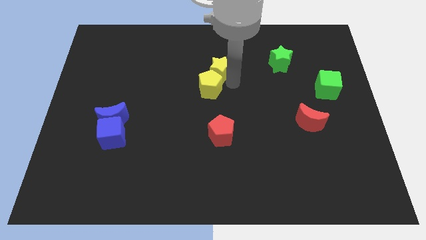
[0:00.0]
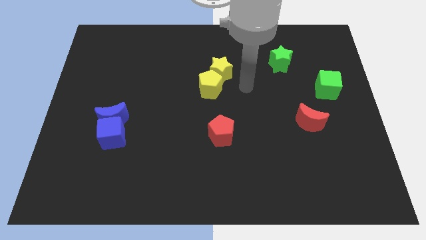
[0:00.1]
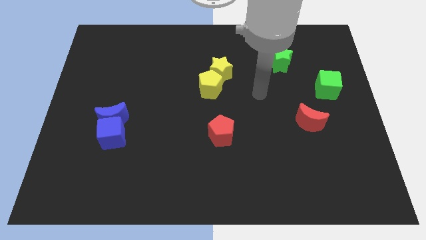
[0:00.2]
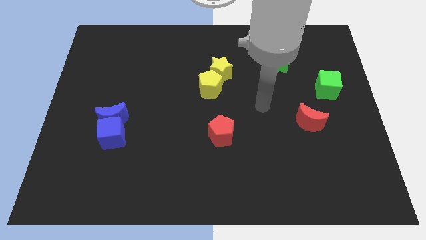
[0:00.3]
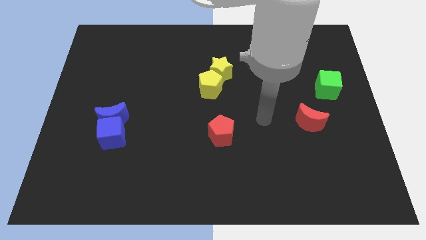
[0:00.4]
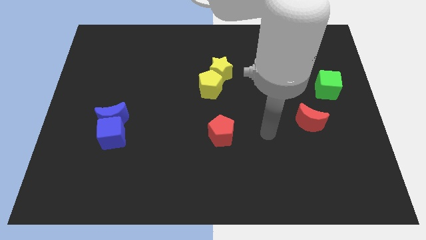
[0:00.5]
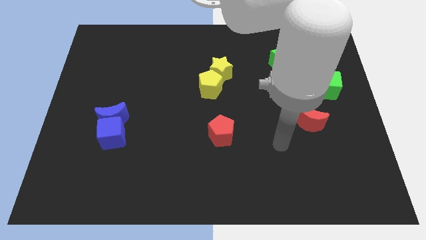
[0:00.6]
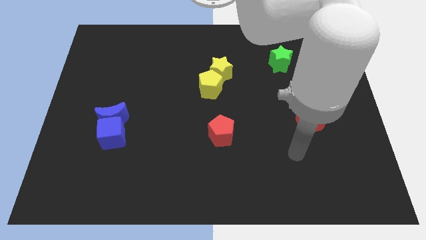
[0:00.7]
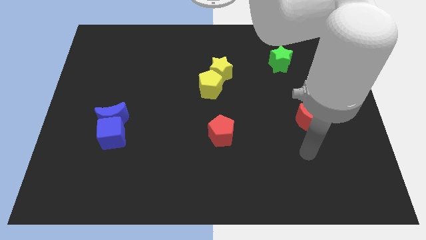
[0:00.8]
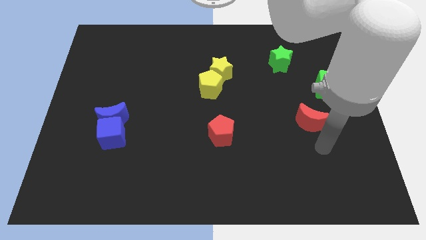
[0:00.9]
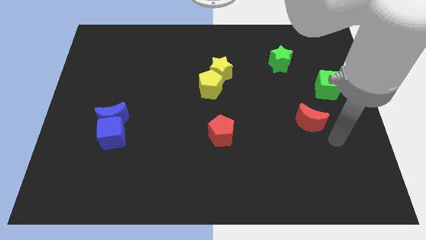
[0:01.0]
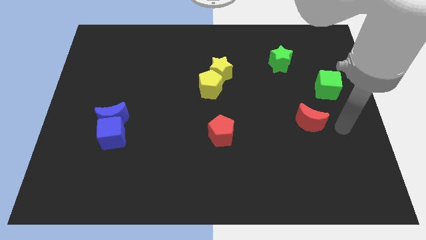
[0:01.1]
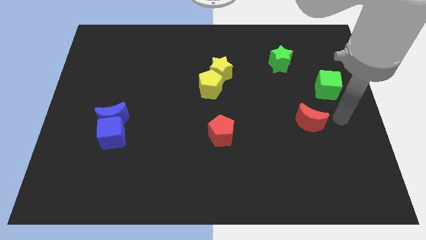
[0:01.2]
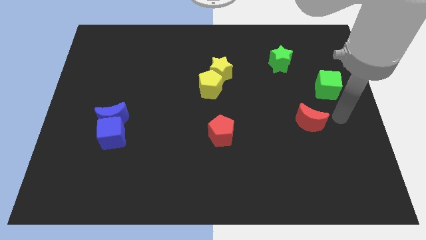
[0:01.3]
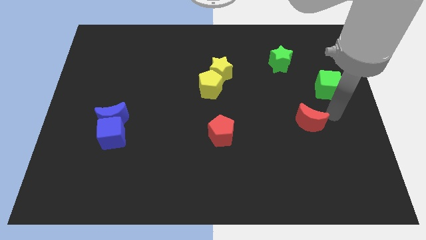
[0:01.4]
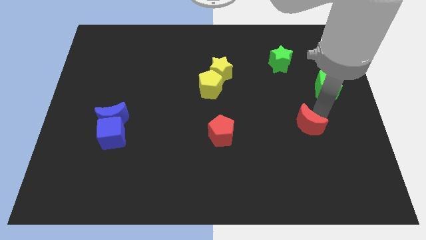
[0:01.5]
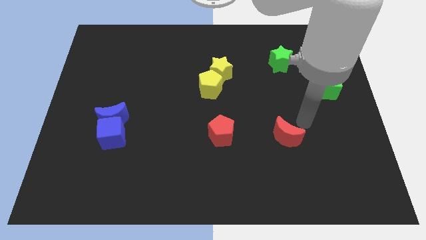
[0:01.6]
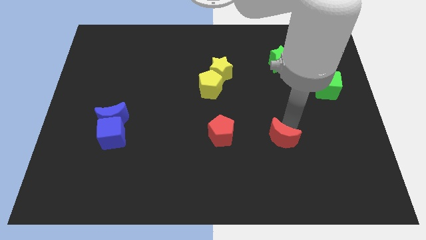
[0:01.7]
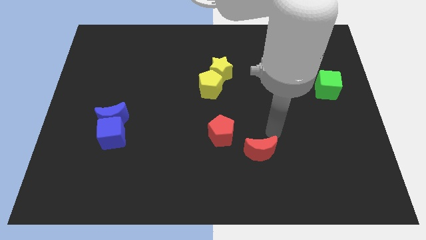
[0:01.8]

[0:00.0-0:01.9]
pull red crescent diagonally below red pentagon

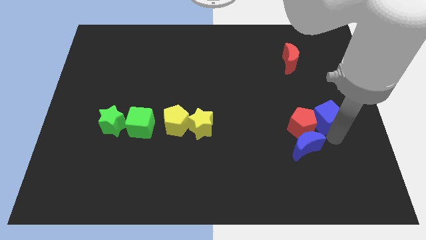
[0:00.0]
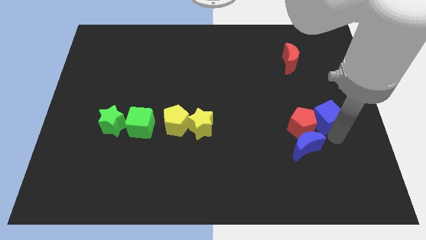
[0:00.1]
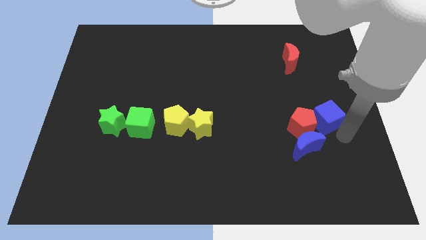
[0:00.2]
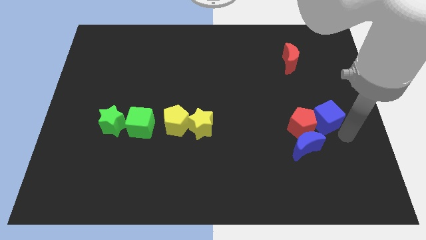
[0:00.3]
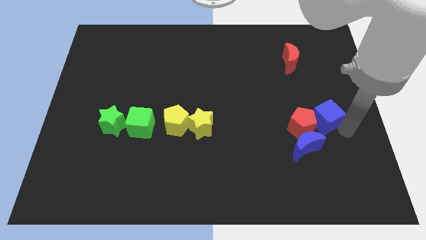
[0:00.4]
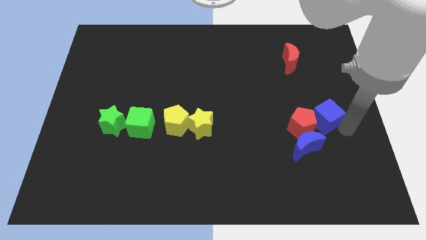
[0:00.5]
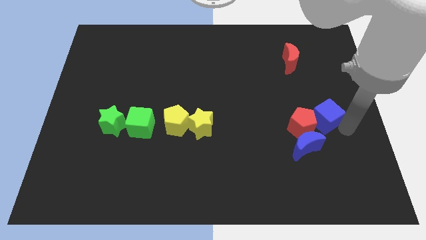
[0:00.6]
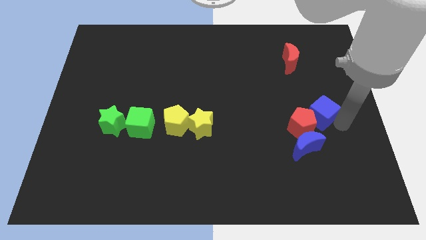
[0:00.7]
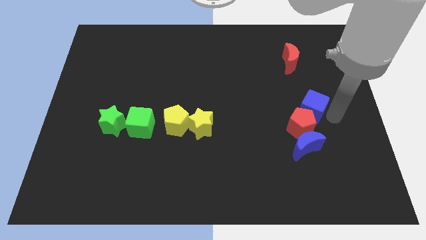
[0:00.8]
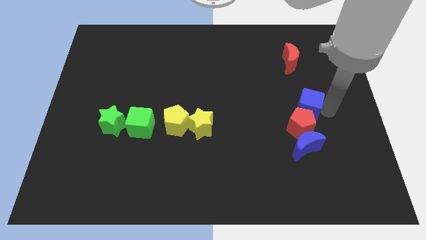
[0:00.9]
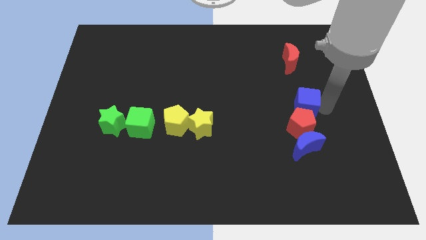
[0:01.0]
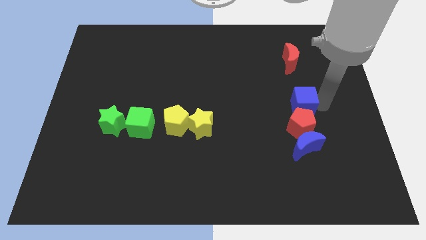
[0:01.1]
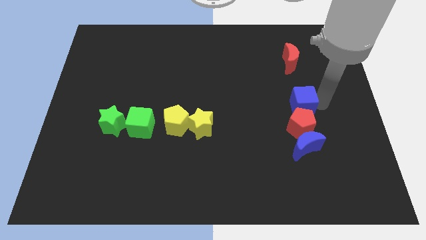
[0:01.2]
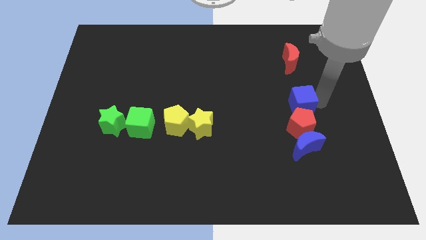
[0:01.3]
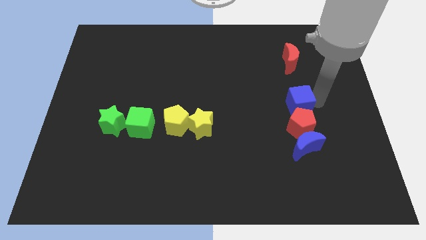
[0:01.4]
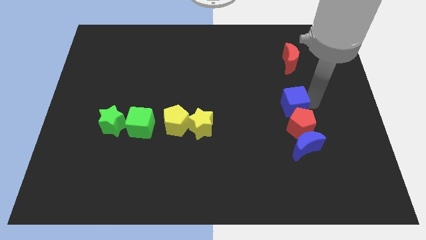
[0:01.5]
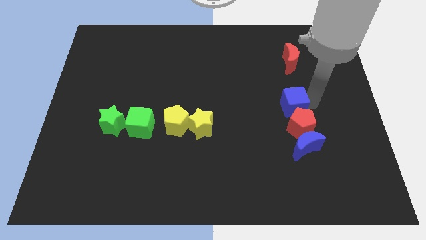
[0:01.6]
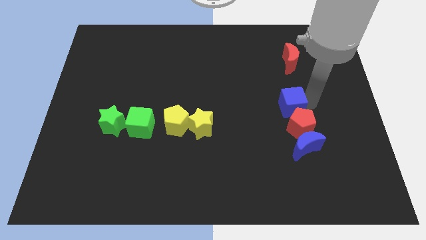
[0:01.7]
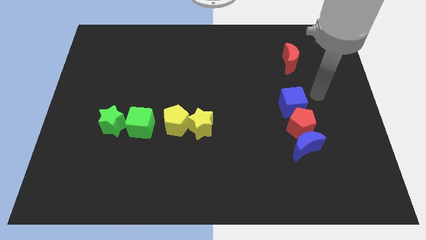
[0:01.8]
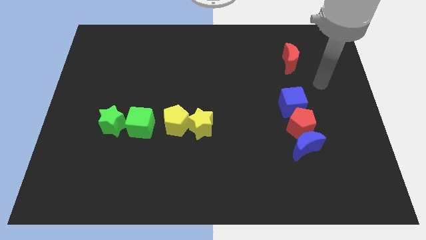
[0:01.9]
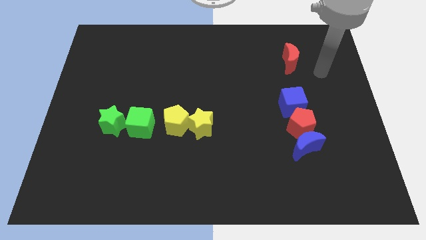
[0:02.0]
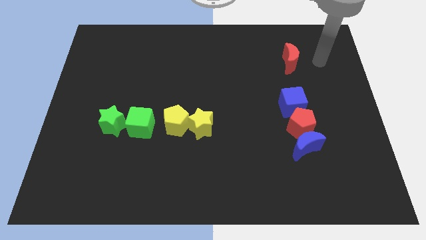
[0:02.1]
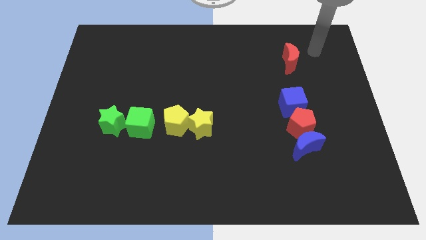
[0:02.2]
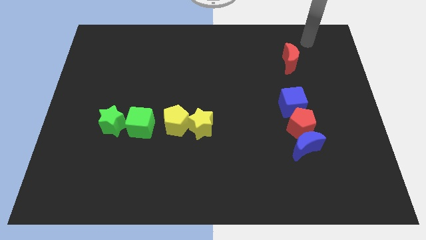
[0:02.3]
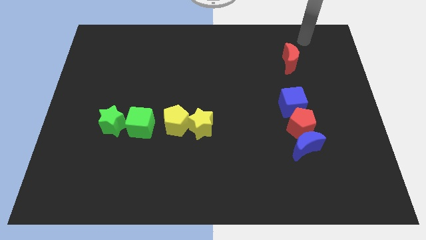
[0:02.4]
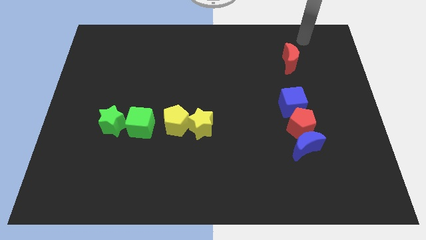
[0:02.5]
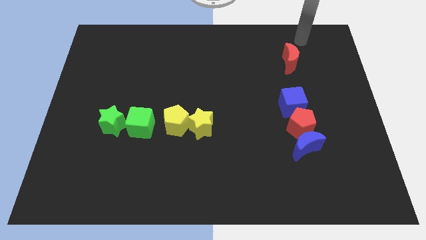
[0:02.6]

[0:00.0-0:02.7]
place the blue cube on top of red pentagon

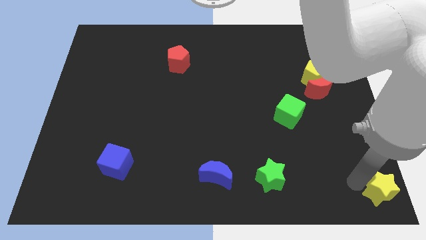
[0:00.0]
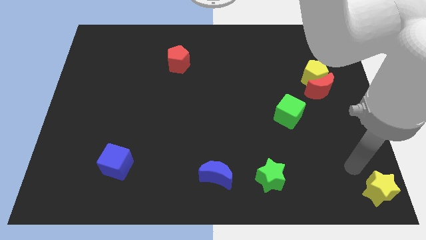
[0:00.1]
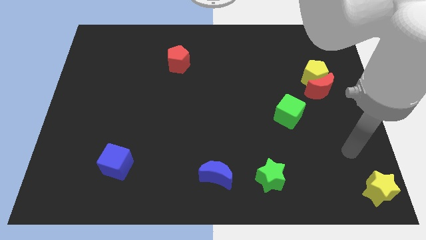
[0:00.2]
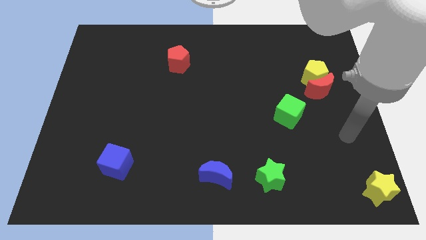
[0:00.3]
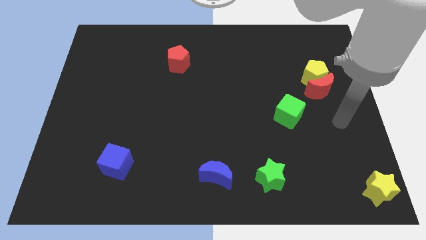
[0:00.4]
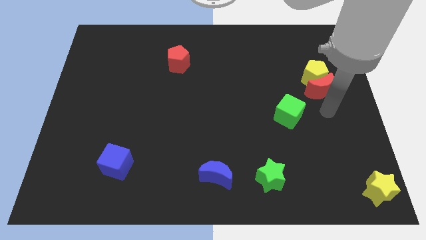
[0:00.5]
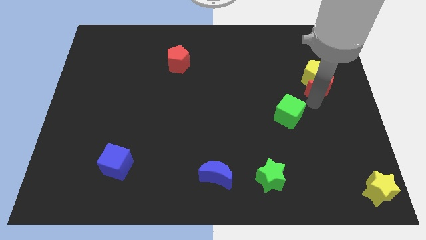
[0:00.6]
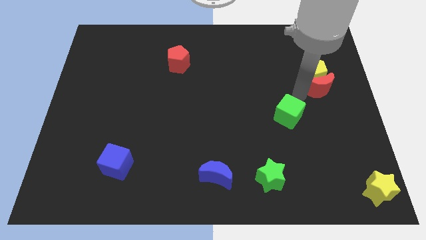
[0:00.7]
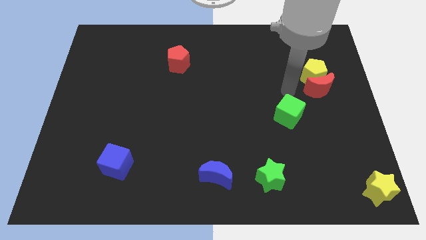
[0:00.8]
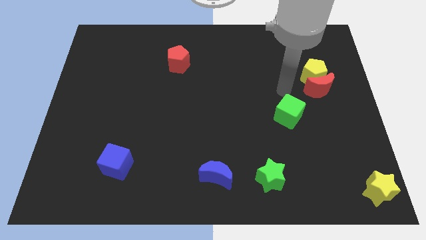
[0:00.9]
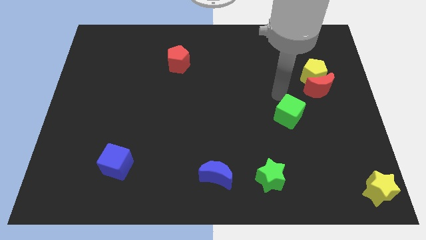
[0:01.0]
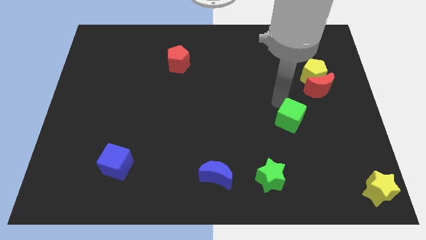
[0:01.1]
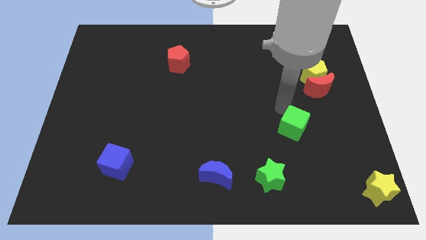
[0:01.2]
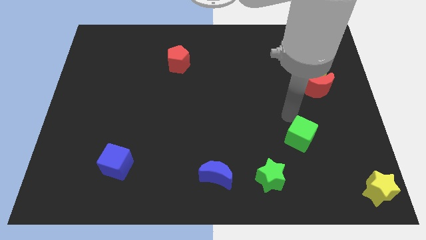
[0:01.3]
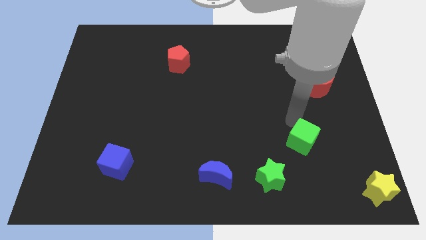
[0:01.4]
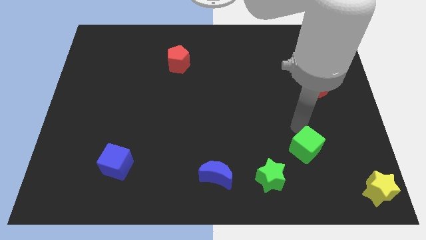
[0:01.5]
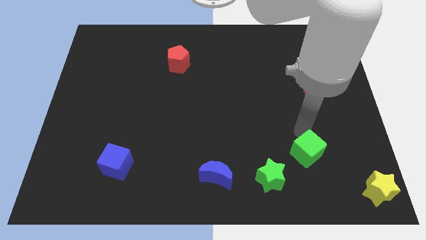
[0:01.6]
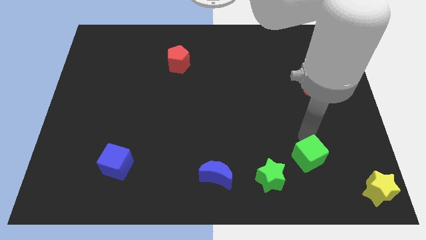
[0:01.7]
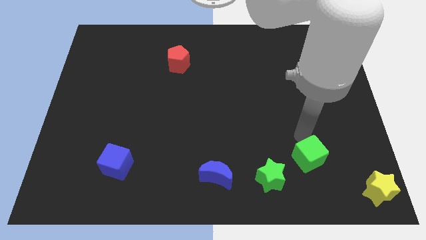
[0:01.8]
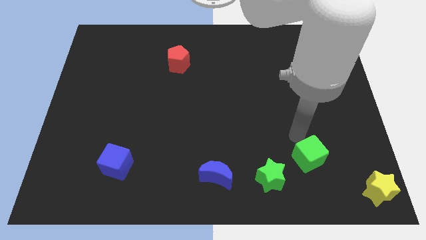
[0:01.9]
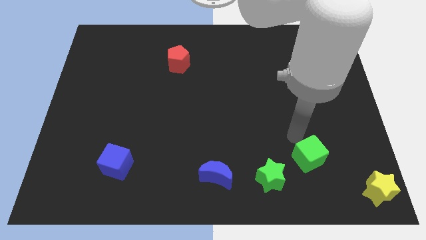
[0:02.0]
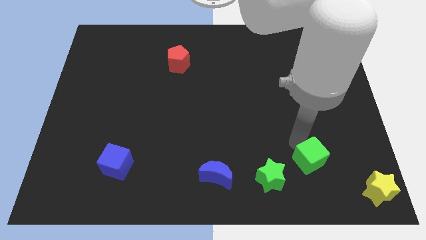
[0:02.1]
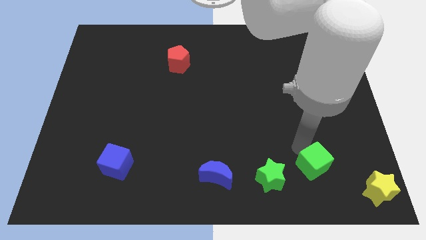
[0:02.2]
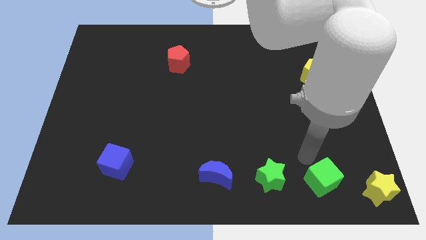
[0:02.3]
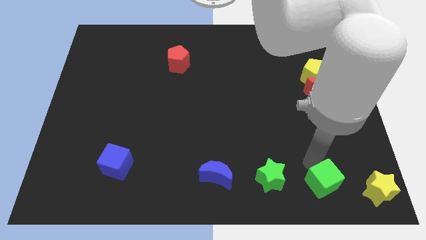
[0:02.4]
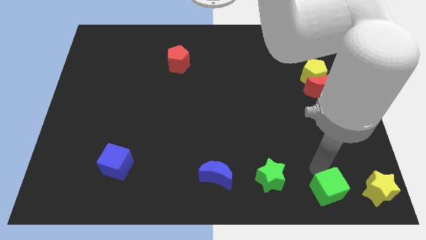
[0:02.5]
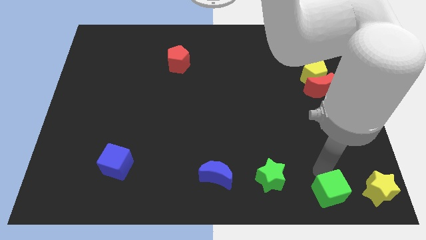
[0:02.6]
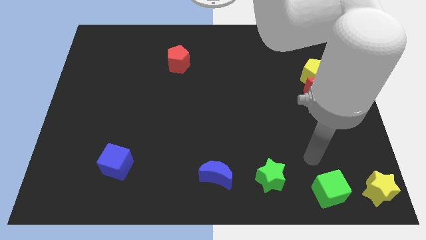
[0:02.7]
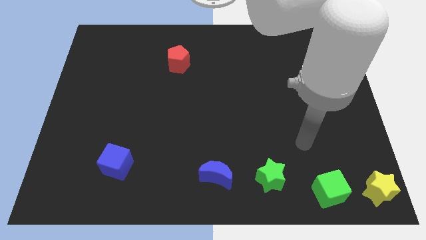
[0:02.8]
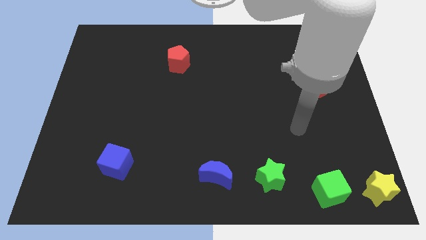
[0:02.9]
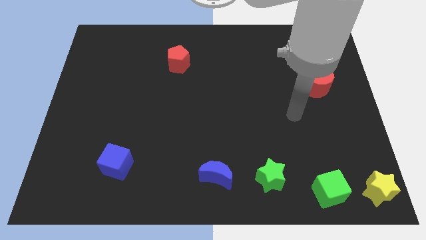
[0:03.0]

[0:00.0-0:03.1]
push the green cube in between the green star and yellow star

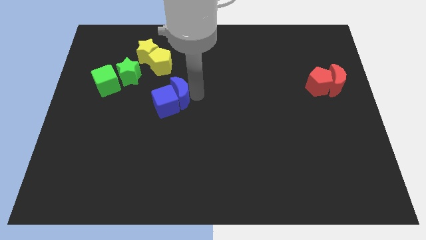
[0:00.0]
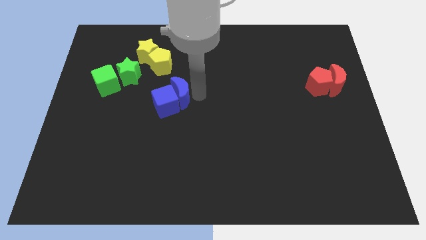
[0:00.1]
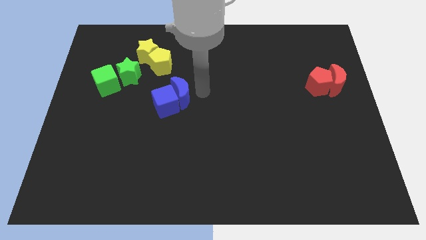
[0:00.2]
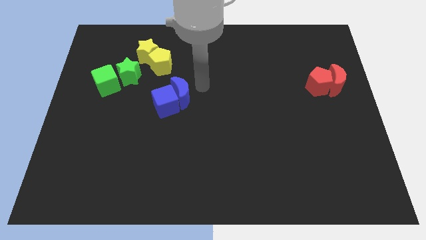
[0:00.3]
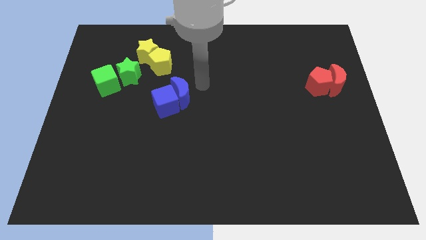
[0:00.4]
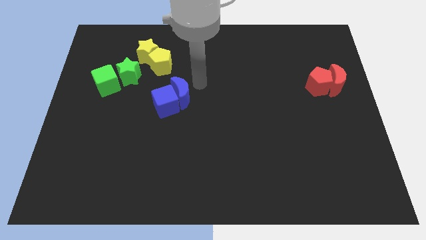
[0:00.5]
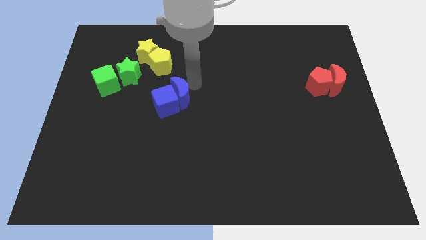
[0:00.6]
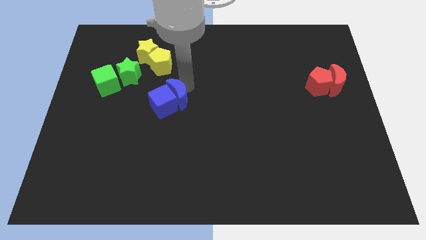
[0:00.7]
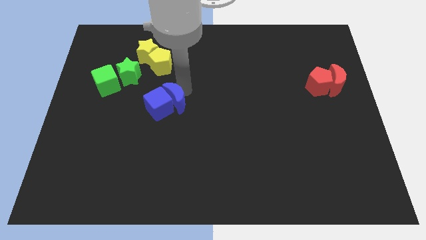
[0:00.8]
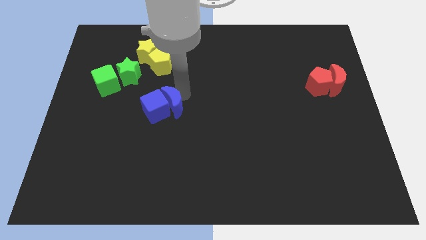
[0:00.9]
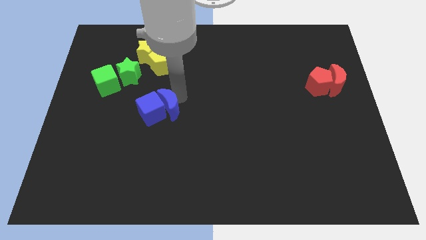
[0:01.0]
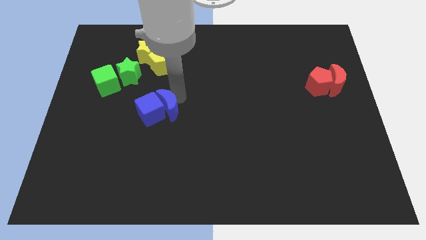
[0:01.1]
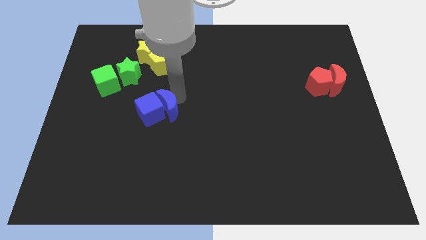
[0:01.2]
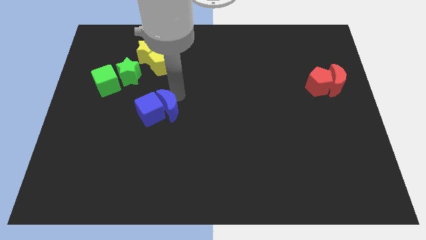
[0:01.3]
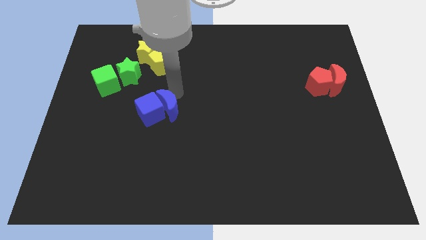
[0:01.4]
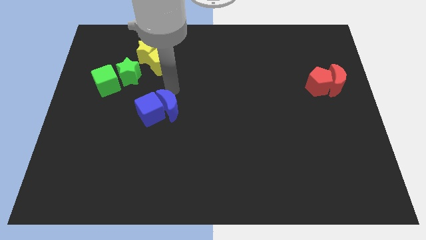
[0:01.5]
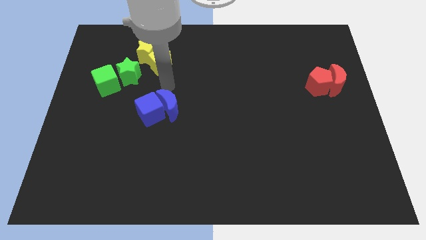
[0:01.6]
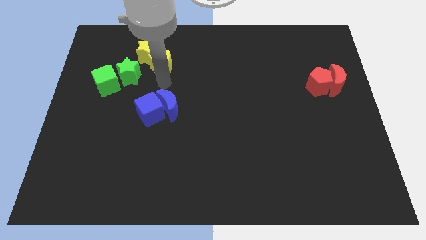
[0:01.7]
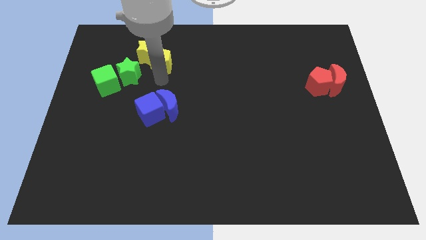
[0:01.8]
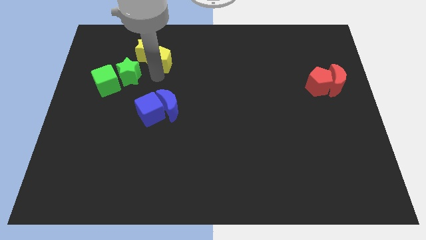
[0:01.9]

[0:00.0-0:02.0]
slide the blue crescent and the blue cube slightly towards the left
